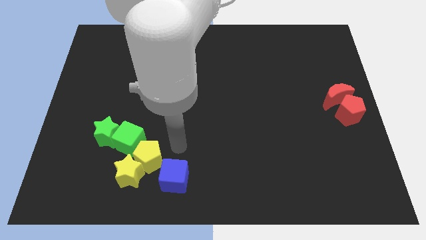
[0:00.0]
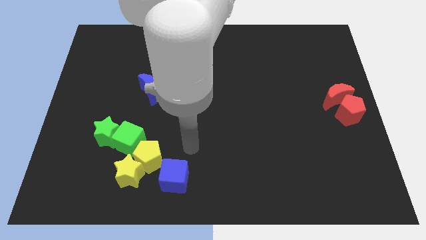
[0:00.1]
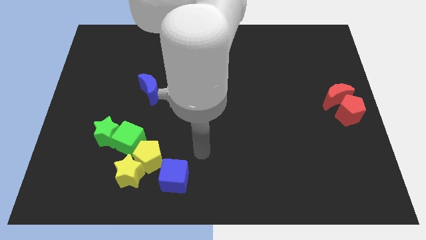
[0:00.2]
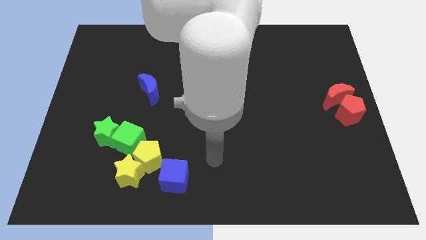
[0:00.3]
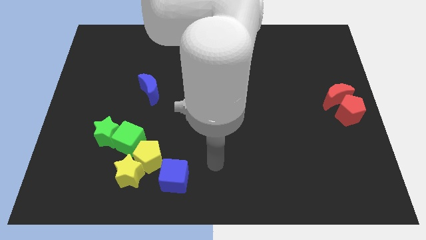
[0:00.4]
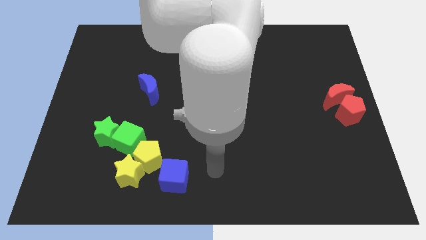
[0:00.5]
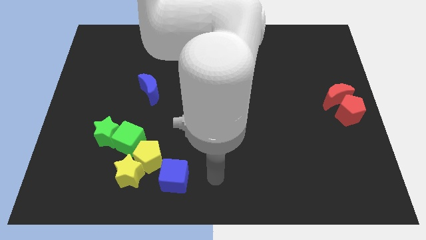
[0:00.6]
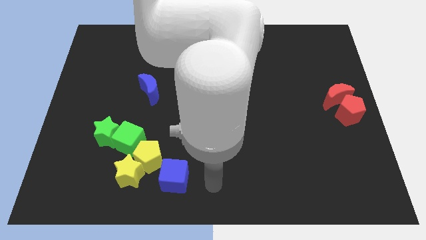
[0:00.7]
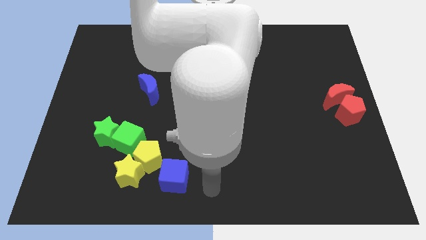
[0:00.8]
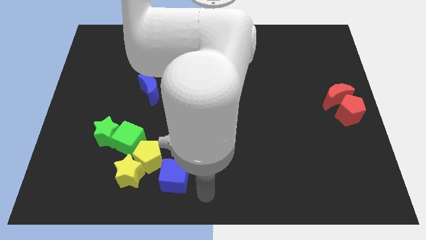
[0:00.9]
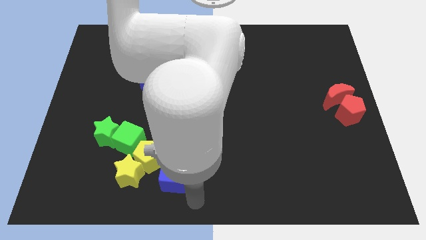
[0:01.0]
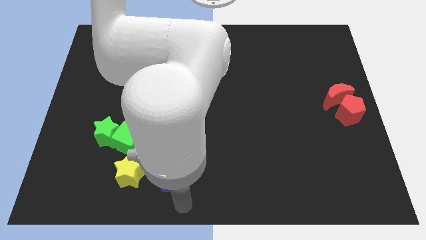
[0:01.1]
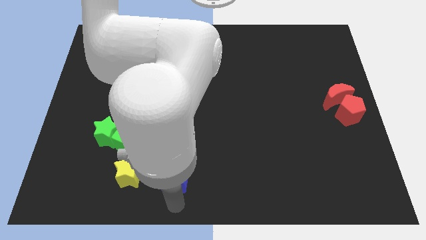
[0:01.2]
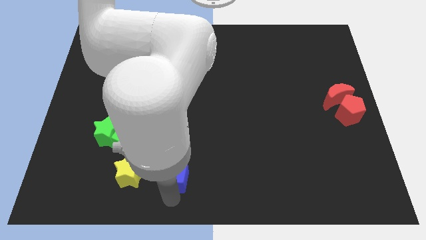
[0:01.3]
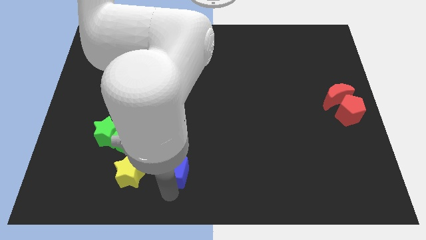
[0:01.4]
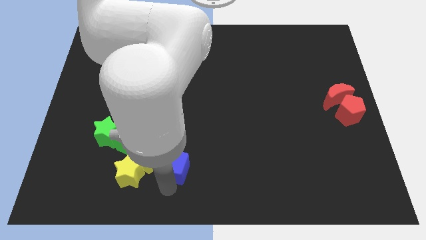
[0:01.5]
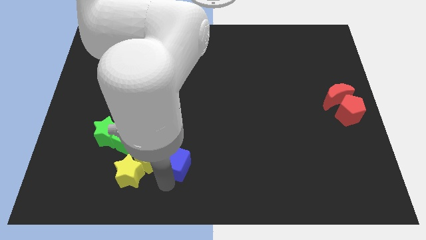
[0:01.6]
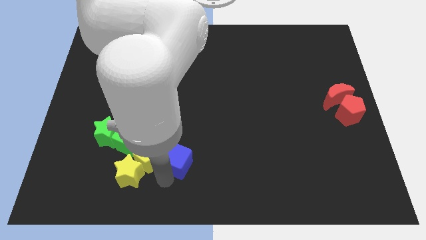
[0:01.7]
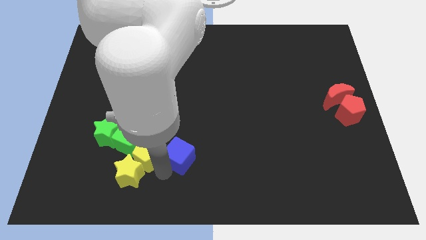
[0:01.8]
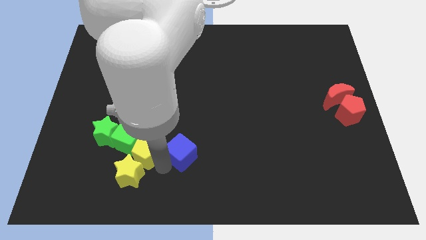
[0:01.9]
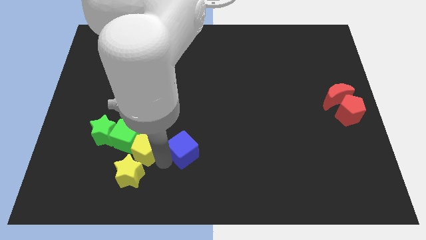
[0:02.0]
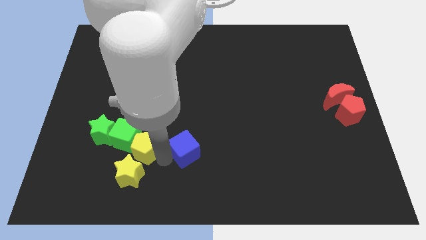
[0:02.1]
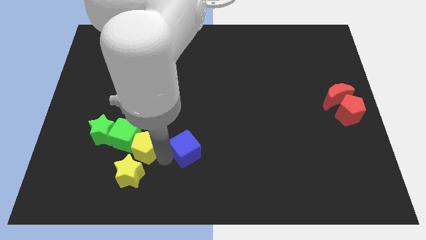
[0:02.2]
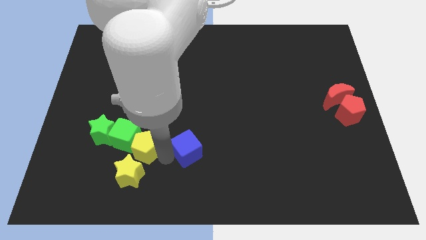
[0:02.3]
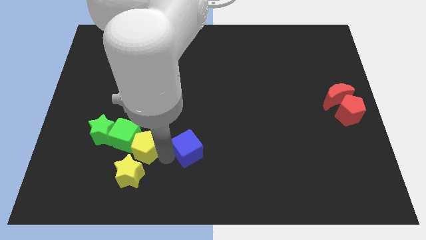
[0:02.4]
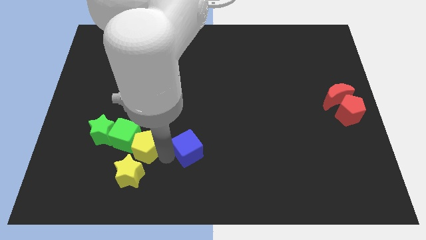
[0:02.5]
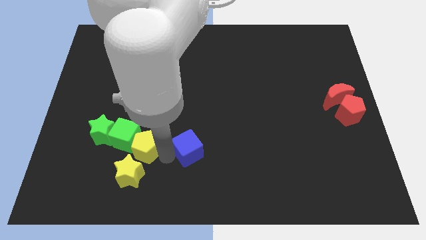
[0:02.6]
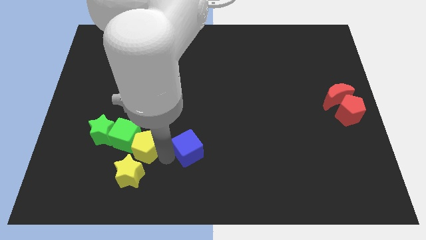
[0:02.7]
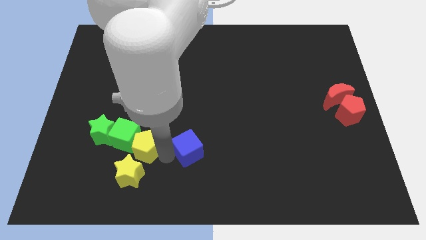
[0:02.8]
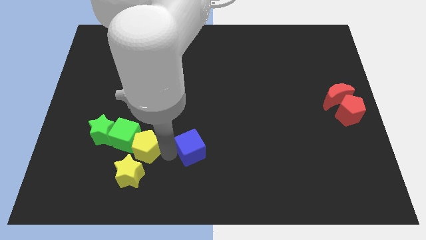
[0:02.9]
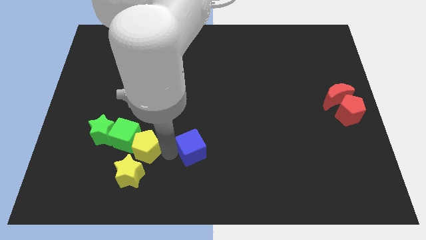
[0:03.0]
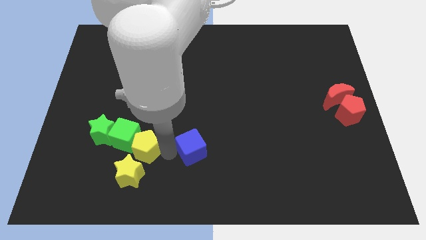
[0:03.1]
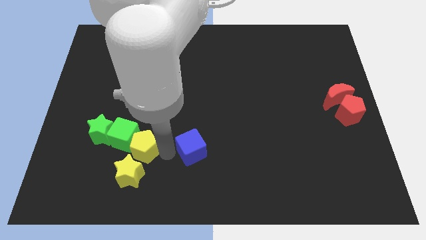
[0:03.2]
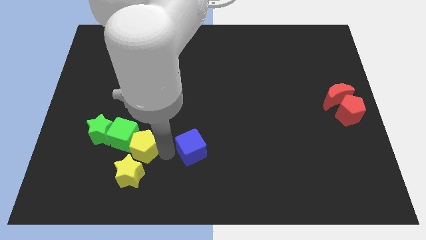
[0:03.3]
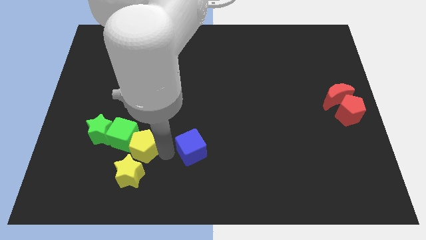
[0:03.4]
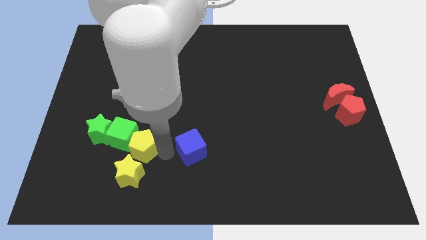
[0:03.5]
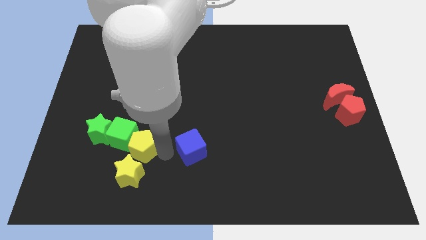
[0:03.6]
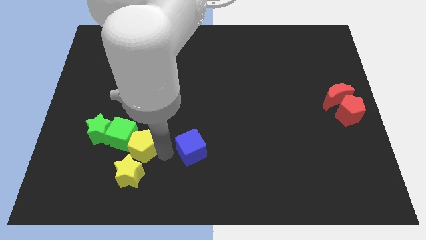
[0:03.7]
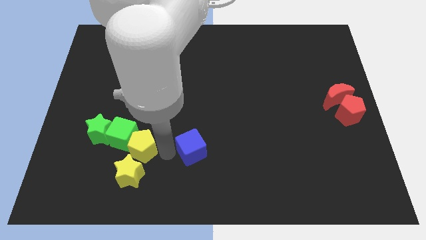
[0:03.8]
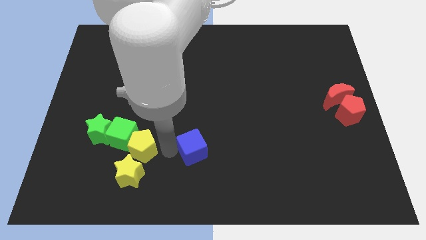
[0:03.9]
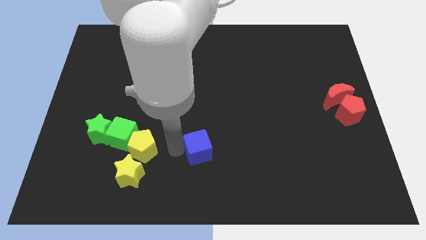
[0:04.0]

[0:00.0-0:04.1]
place the blue cube to the right of the yellow pentagon

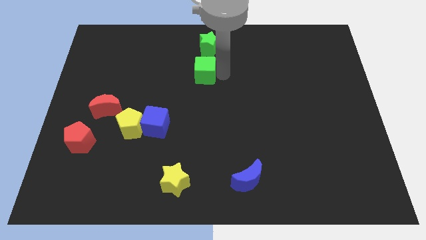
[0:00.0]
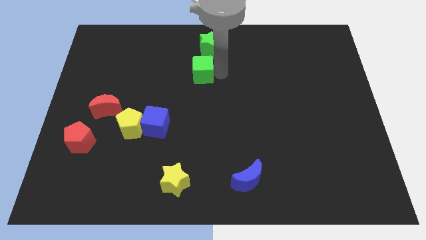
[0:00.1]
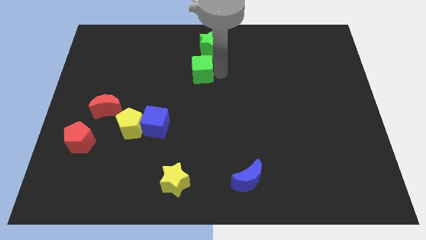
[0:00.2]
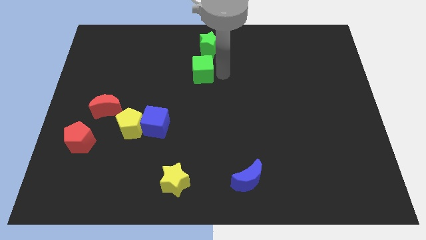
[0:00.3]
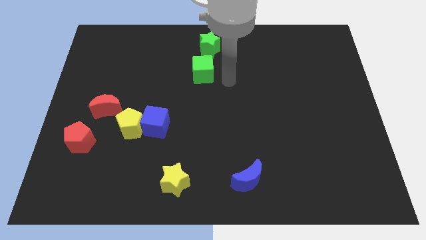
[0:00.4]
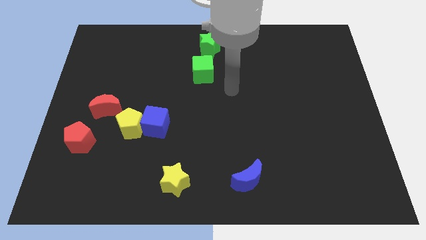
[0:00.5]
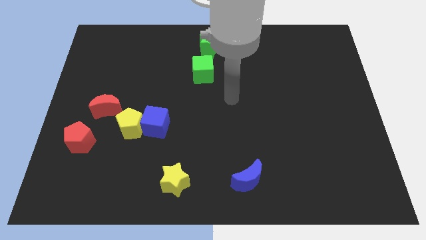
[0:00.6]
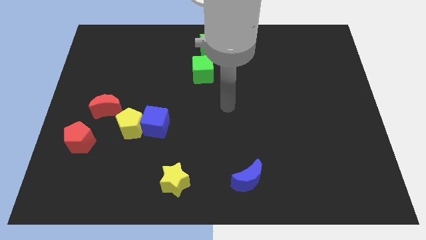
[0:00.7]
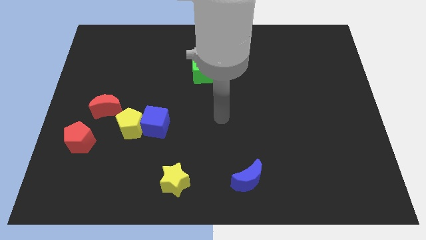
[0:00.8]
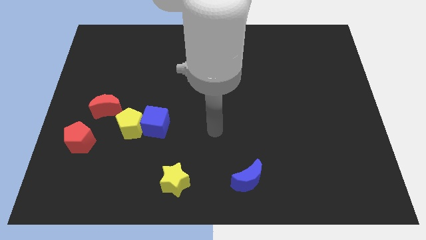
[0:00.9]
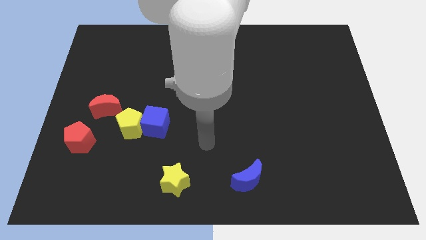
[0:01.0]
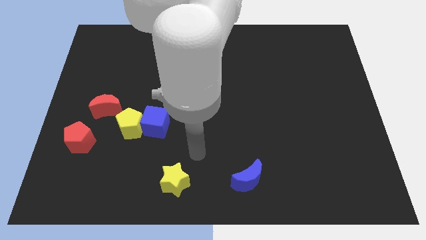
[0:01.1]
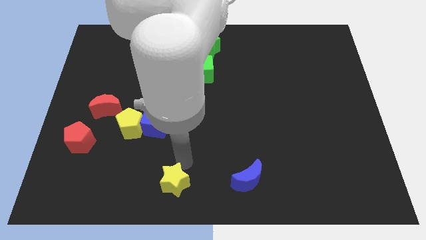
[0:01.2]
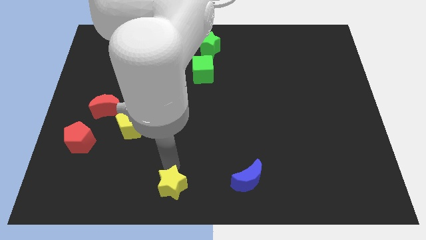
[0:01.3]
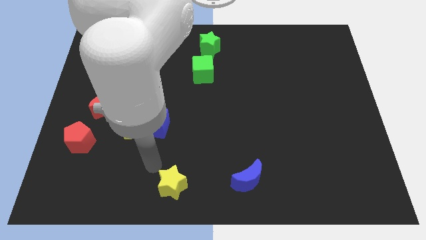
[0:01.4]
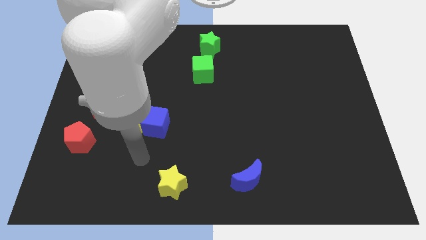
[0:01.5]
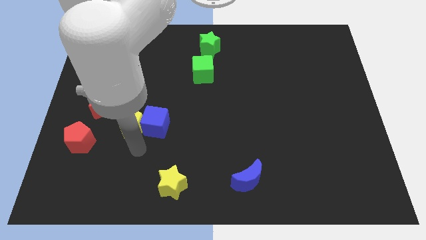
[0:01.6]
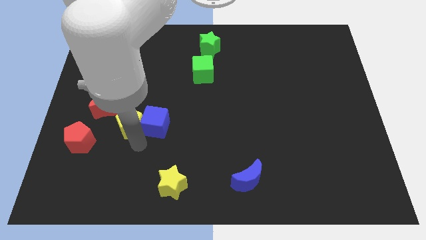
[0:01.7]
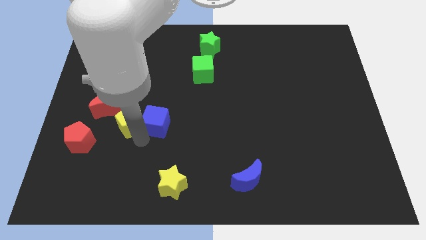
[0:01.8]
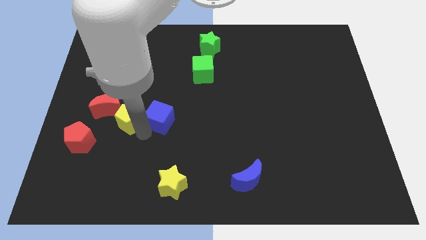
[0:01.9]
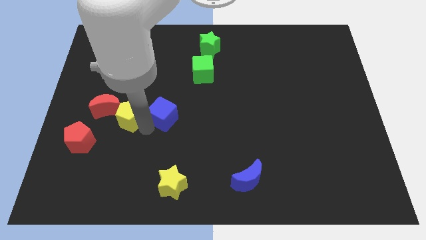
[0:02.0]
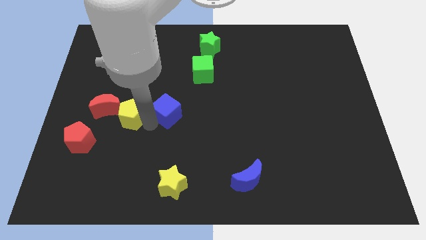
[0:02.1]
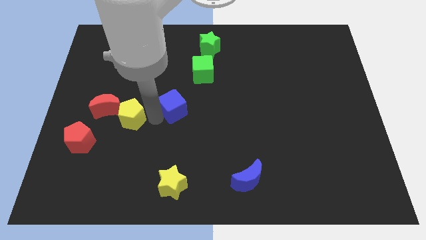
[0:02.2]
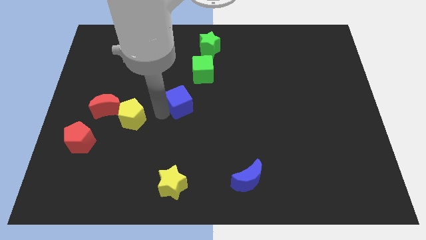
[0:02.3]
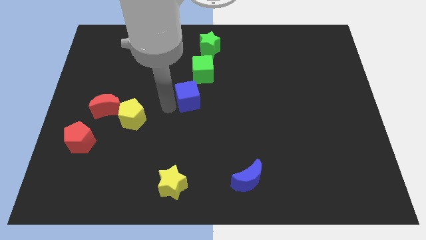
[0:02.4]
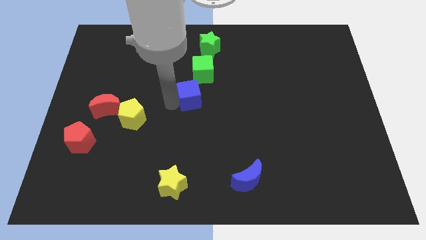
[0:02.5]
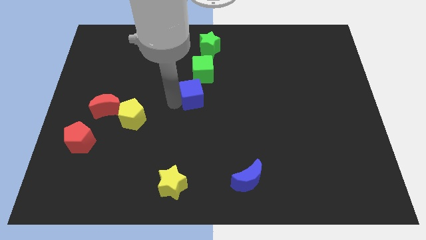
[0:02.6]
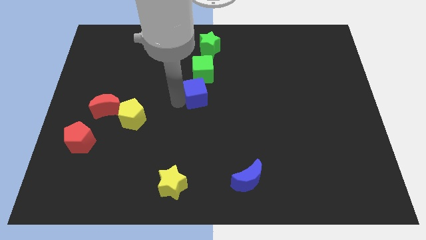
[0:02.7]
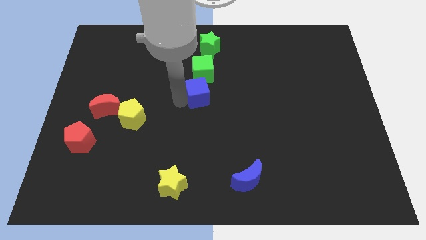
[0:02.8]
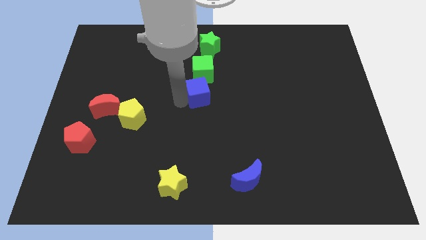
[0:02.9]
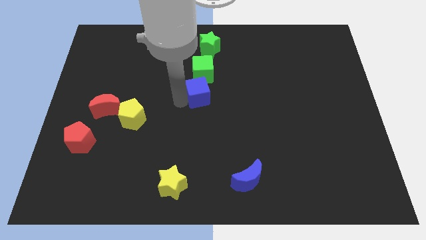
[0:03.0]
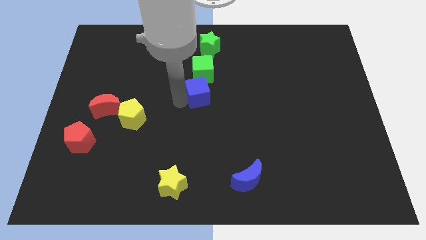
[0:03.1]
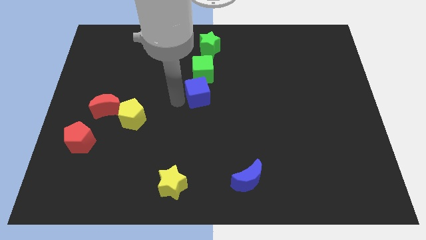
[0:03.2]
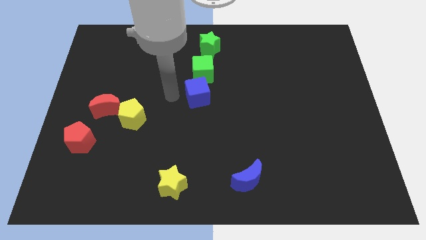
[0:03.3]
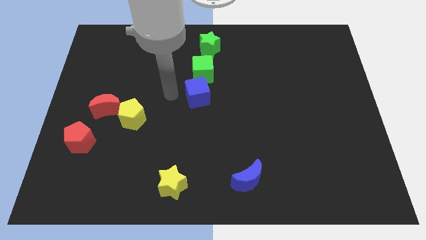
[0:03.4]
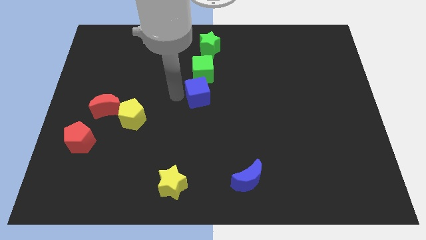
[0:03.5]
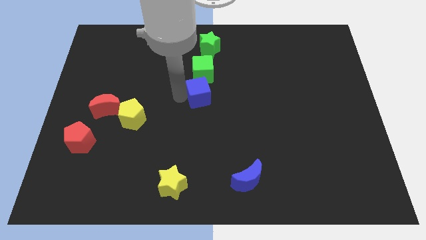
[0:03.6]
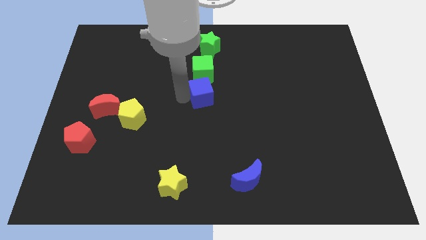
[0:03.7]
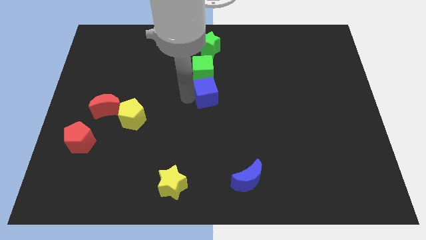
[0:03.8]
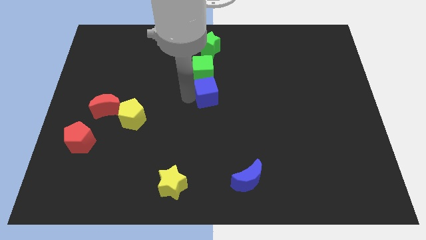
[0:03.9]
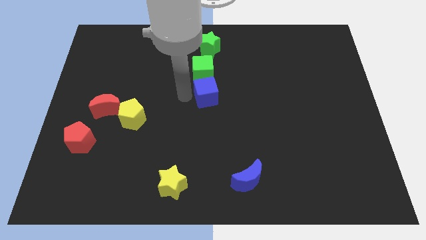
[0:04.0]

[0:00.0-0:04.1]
move the blue cube below the green cube

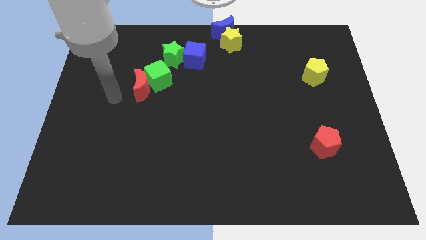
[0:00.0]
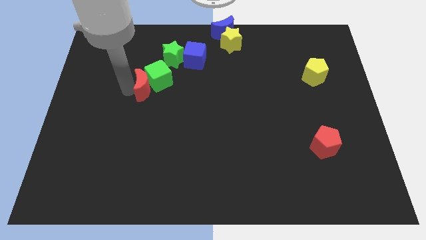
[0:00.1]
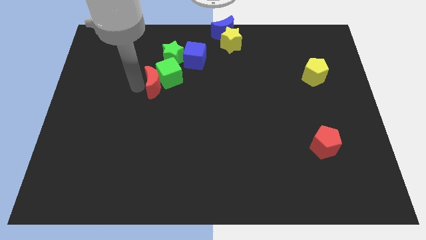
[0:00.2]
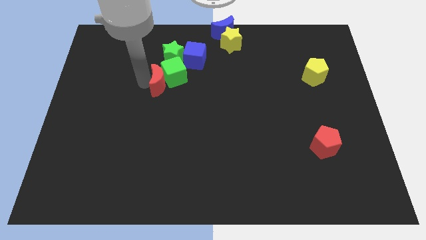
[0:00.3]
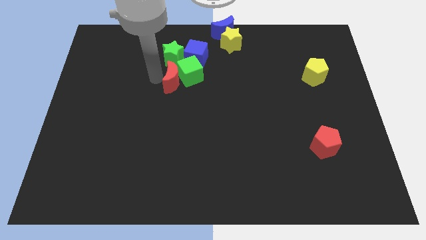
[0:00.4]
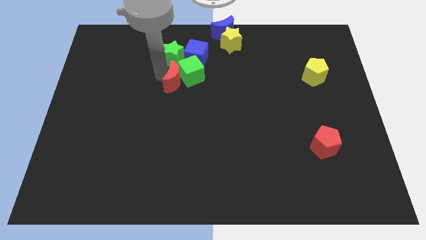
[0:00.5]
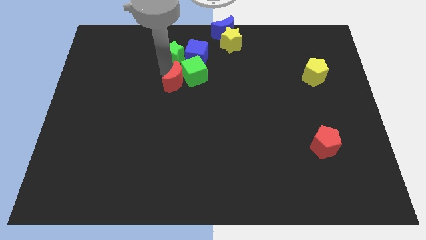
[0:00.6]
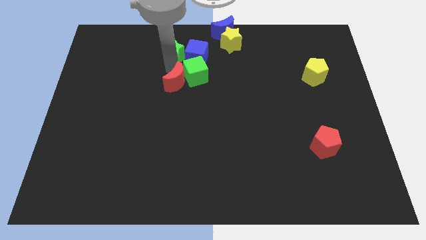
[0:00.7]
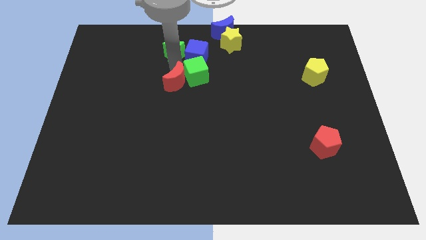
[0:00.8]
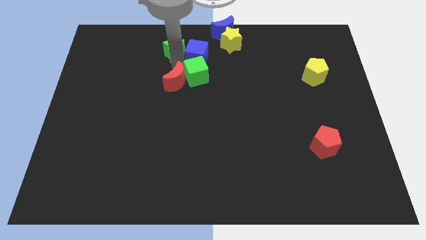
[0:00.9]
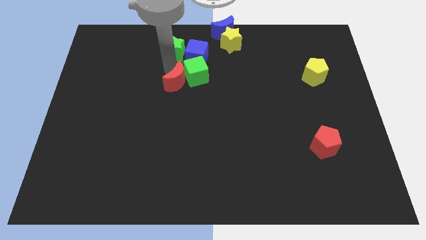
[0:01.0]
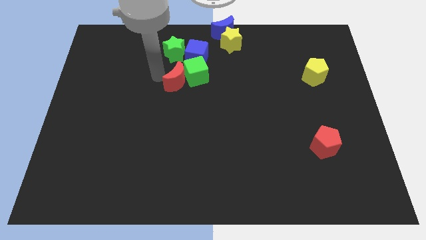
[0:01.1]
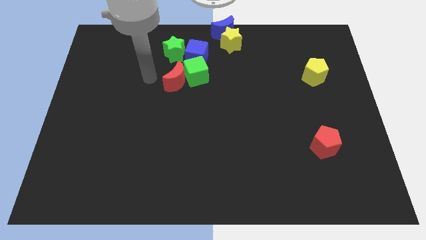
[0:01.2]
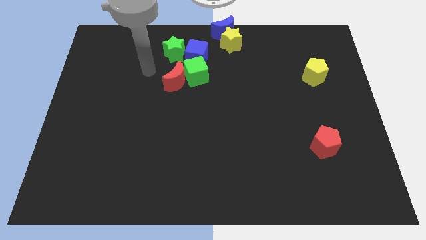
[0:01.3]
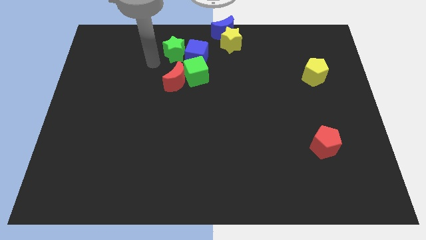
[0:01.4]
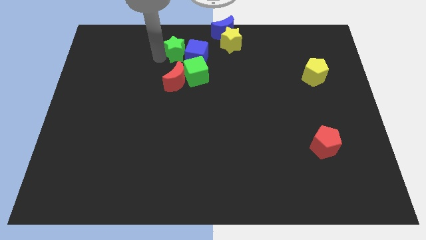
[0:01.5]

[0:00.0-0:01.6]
push the green cube with red moon
